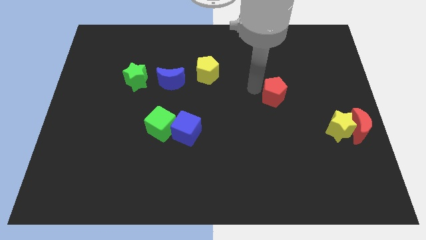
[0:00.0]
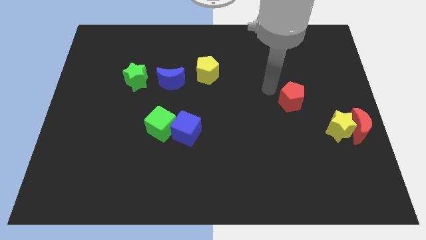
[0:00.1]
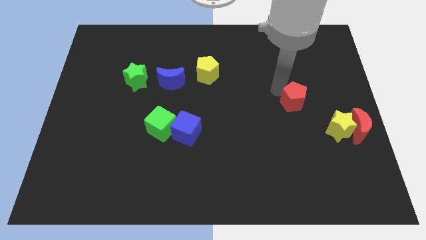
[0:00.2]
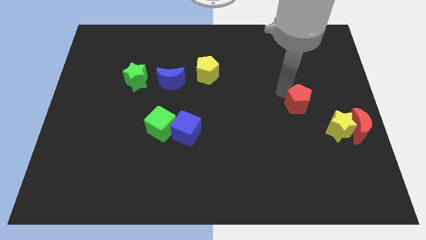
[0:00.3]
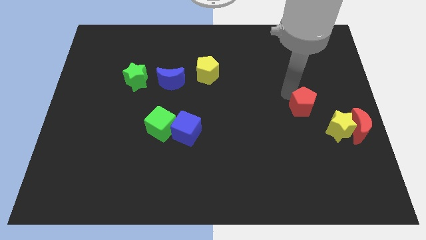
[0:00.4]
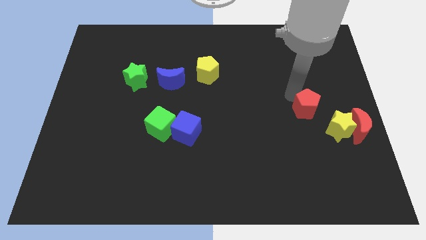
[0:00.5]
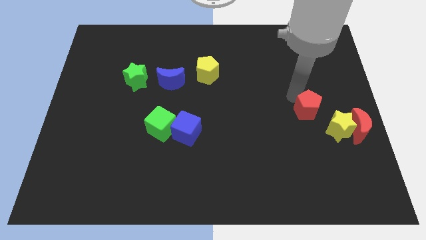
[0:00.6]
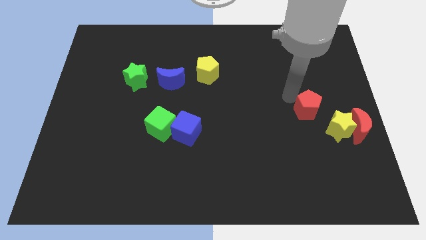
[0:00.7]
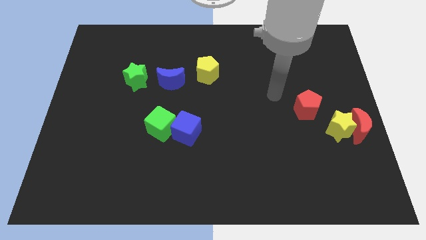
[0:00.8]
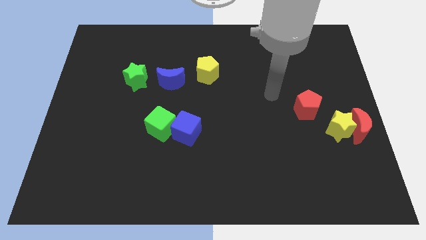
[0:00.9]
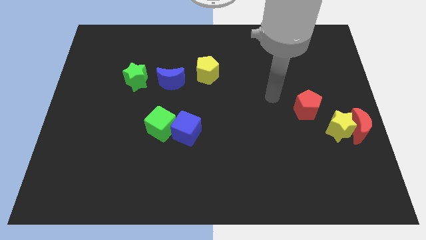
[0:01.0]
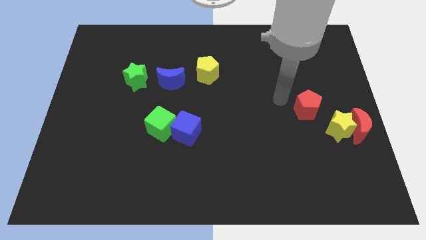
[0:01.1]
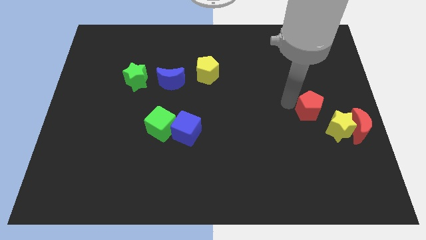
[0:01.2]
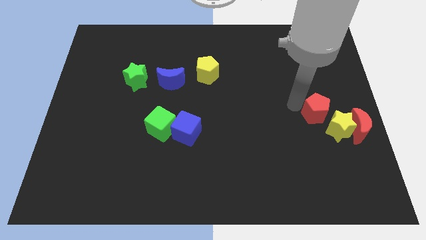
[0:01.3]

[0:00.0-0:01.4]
move the red pentagon above the yellow star

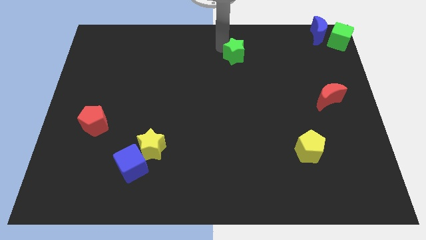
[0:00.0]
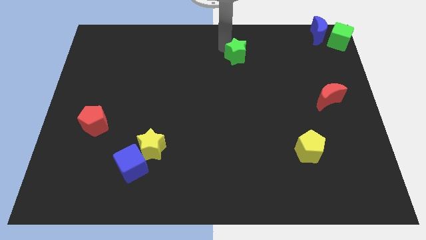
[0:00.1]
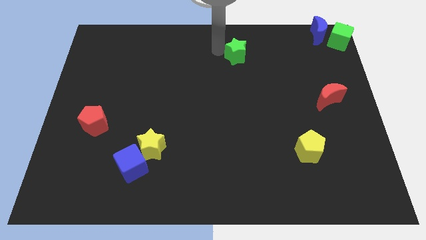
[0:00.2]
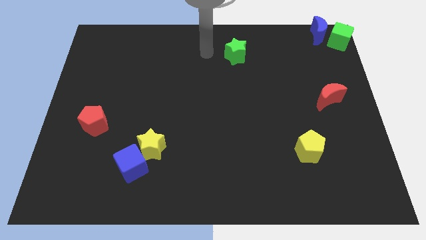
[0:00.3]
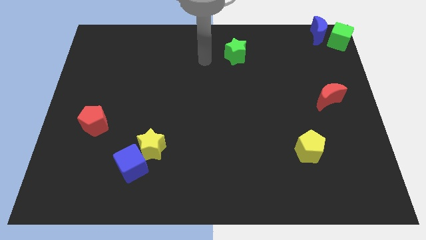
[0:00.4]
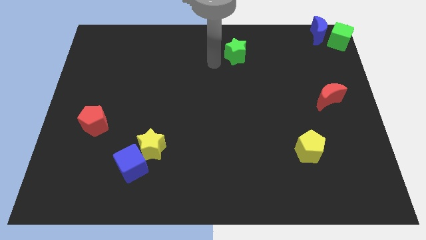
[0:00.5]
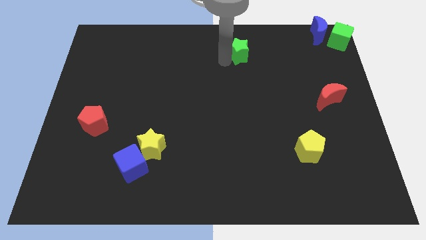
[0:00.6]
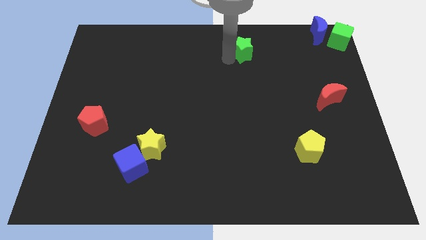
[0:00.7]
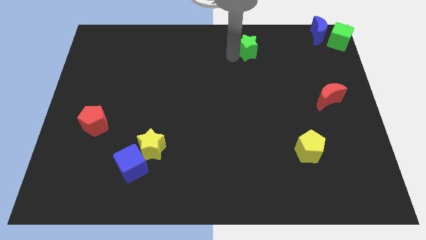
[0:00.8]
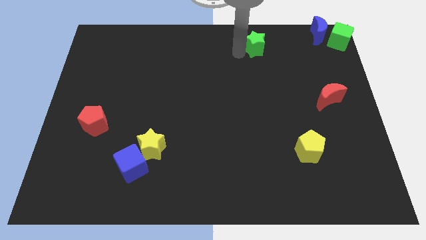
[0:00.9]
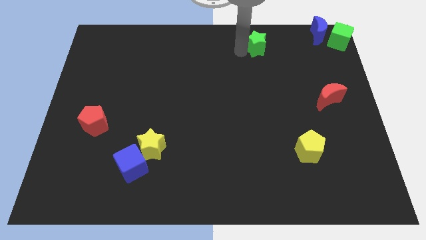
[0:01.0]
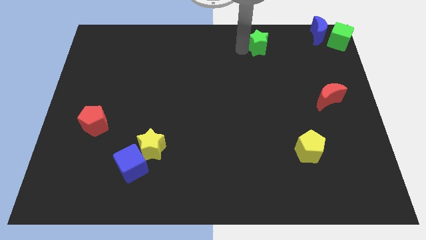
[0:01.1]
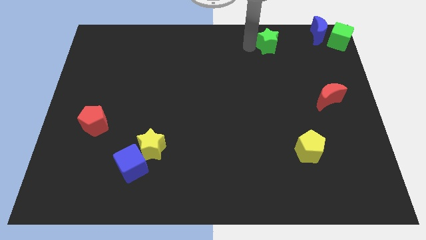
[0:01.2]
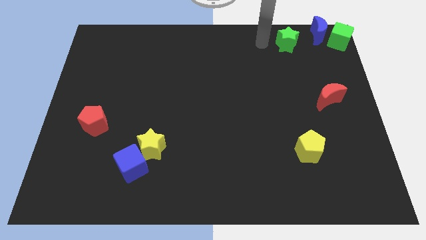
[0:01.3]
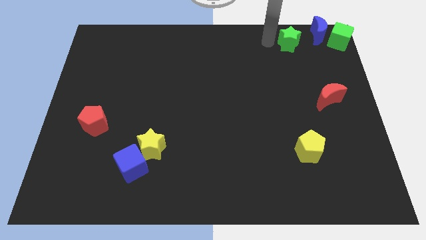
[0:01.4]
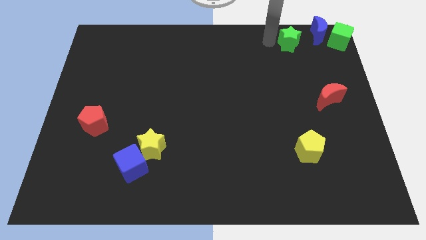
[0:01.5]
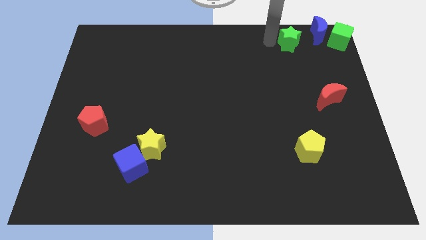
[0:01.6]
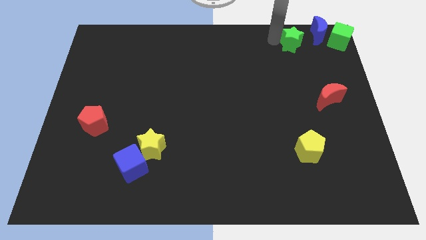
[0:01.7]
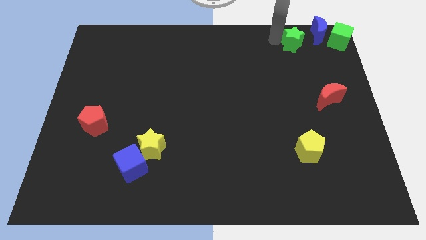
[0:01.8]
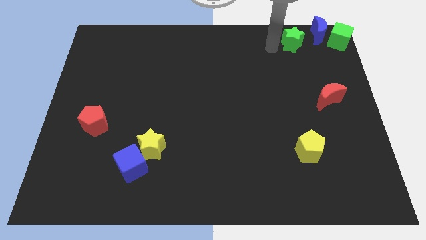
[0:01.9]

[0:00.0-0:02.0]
push the green star close to the blue crescent

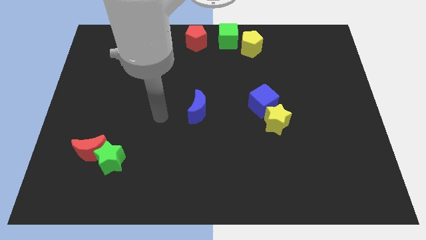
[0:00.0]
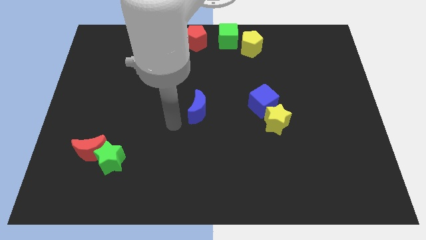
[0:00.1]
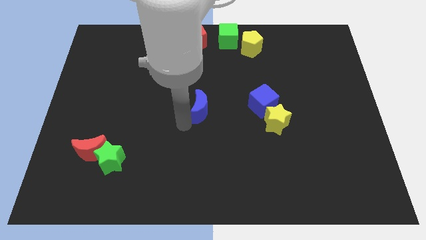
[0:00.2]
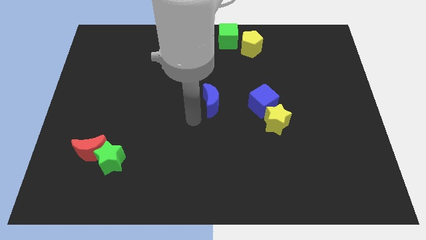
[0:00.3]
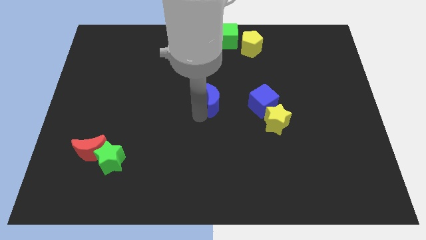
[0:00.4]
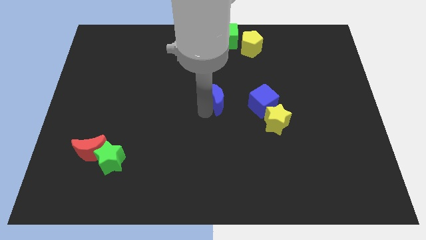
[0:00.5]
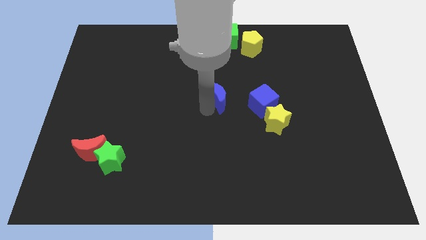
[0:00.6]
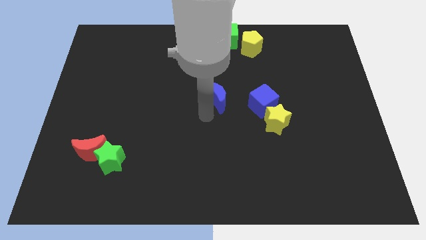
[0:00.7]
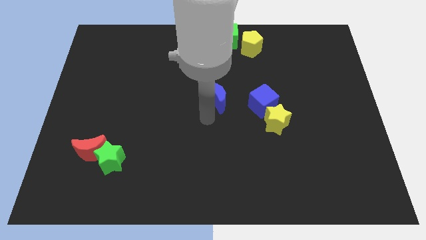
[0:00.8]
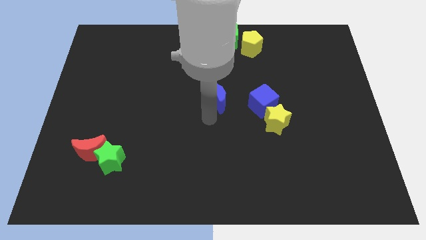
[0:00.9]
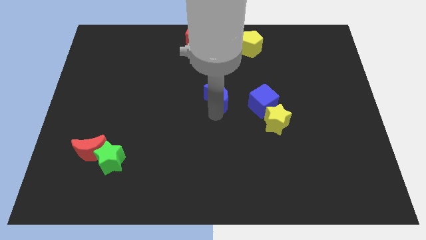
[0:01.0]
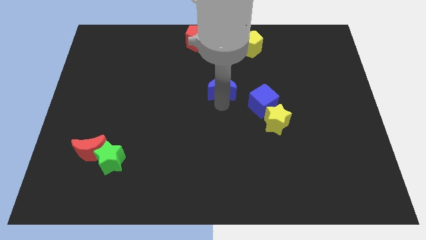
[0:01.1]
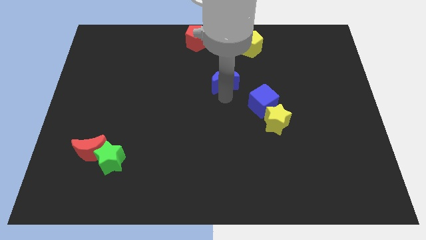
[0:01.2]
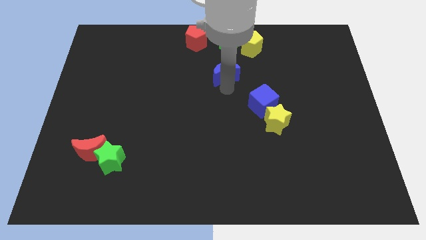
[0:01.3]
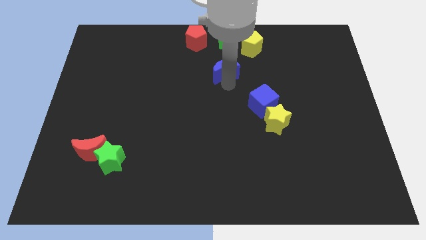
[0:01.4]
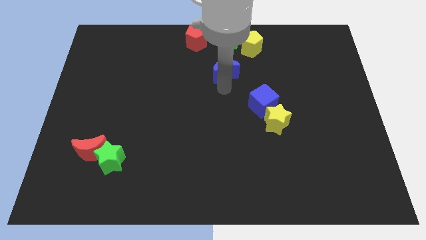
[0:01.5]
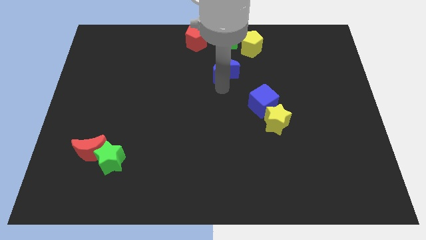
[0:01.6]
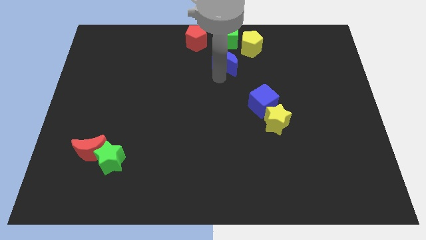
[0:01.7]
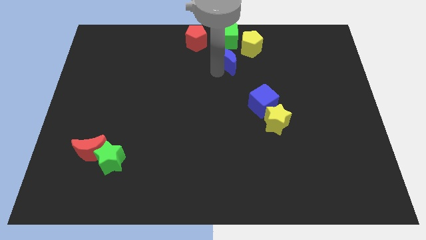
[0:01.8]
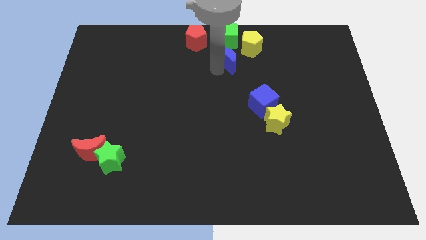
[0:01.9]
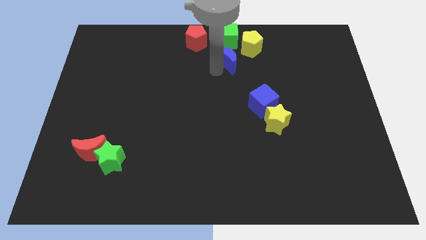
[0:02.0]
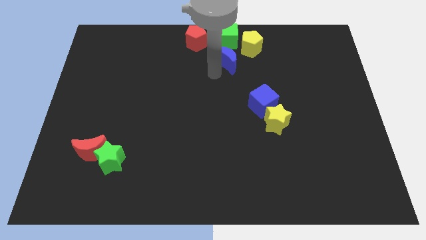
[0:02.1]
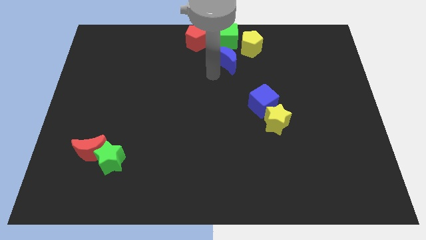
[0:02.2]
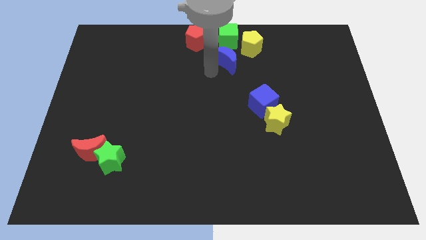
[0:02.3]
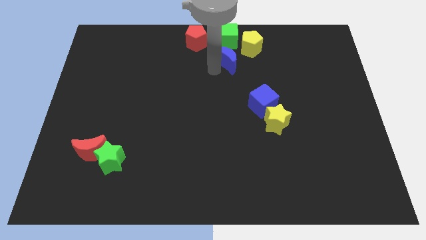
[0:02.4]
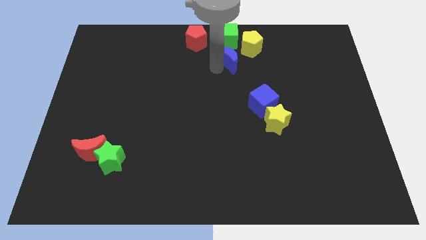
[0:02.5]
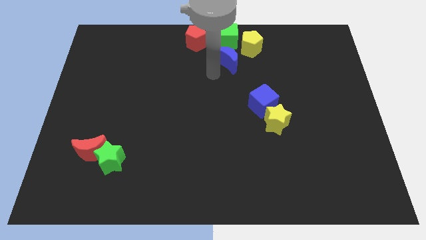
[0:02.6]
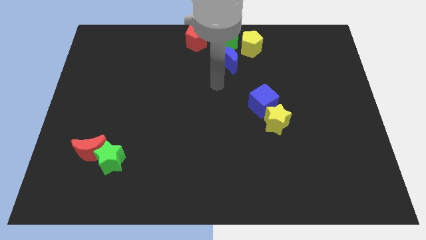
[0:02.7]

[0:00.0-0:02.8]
place blue crescent below green cube

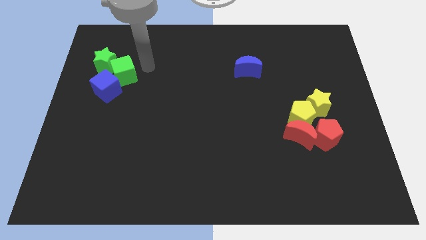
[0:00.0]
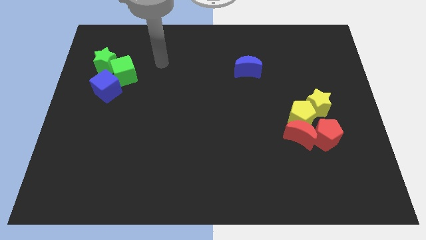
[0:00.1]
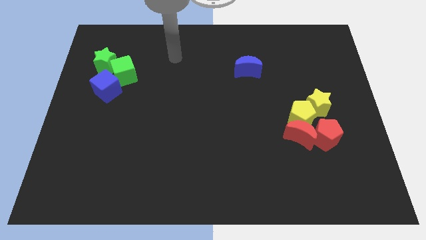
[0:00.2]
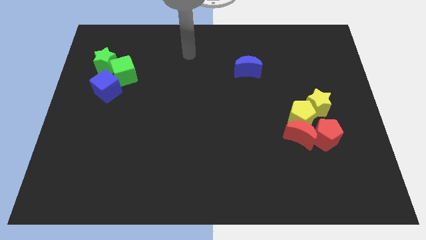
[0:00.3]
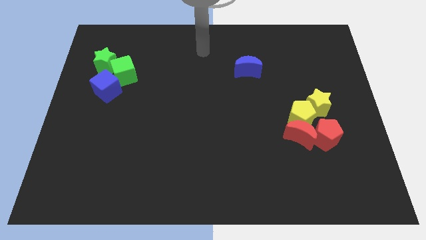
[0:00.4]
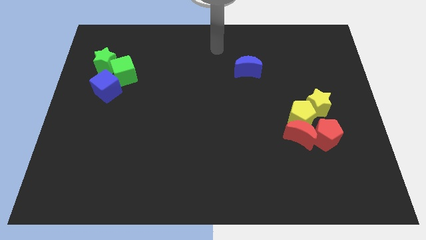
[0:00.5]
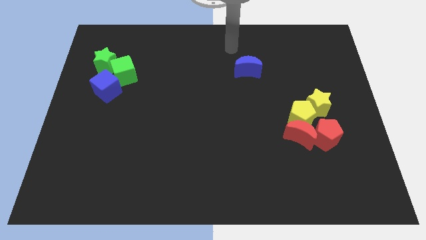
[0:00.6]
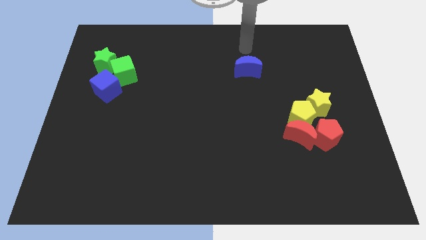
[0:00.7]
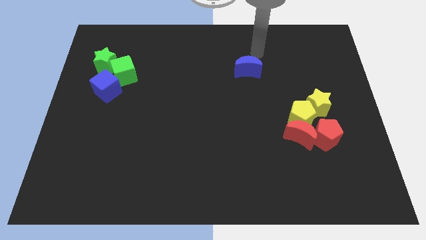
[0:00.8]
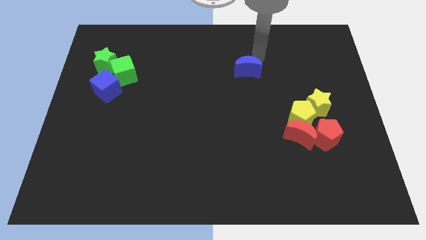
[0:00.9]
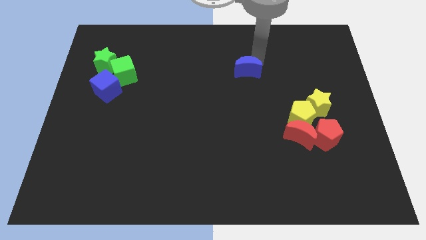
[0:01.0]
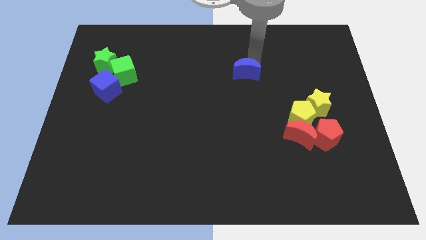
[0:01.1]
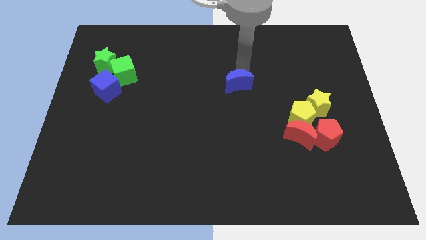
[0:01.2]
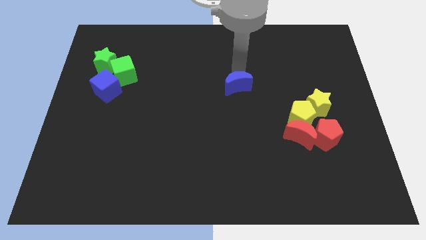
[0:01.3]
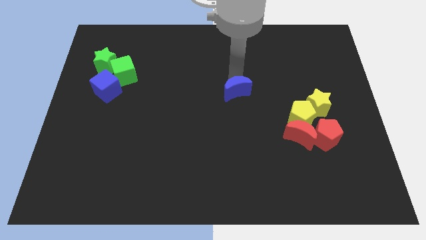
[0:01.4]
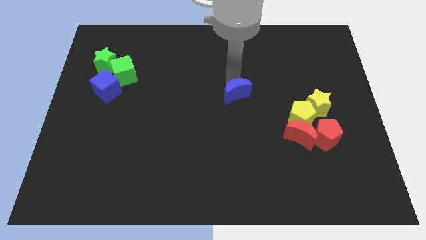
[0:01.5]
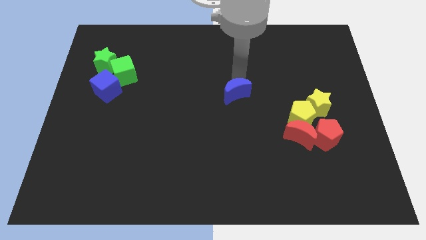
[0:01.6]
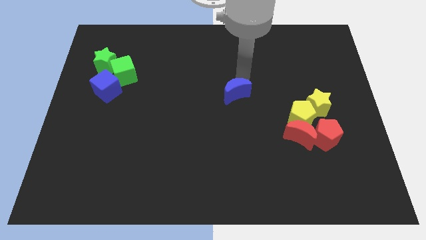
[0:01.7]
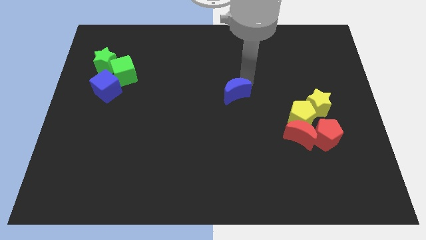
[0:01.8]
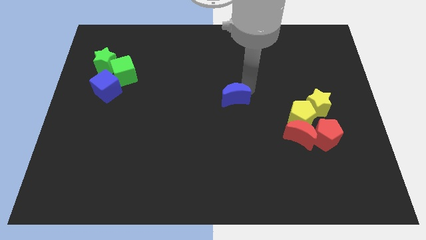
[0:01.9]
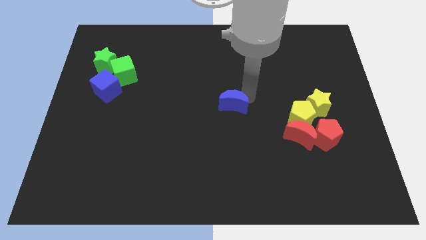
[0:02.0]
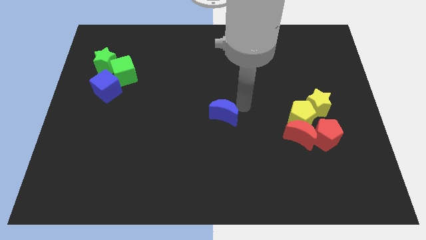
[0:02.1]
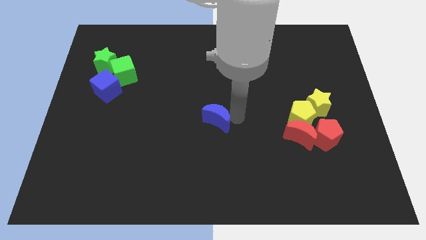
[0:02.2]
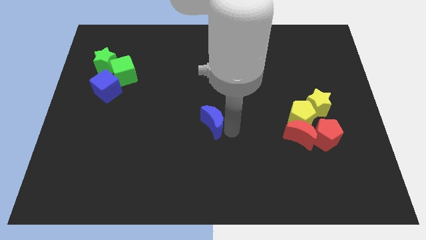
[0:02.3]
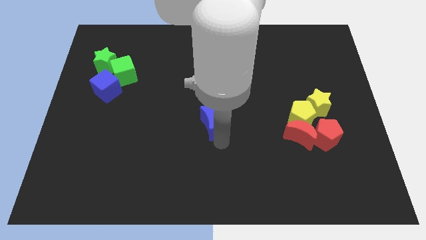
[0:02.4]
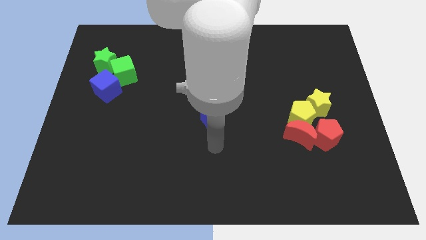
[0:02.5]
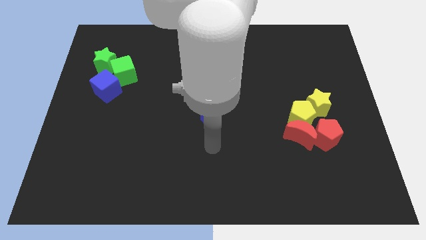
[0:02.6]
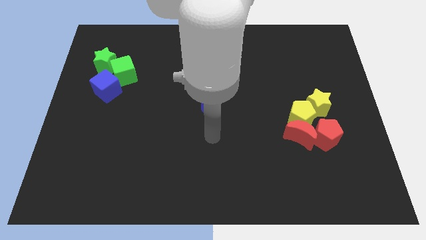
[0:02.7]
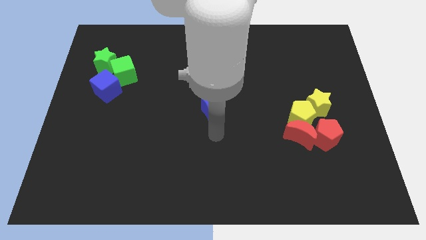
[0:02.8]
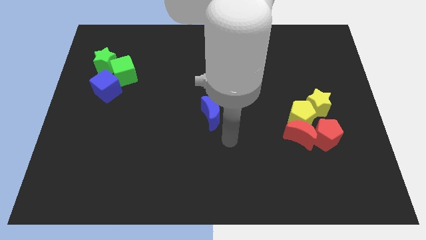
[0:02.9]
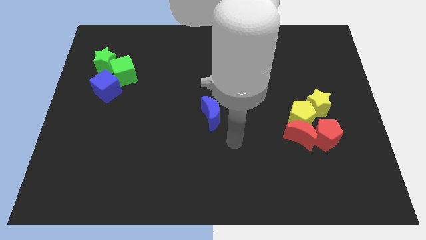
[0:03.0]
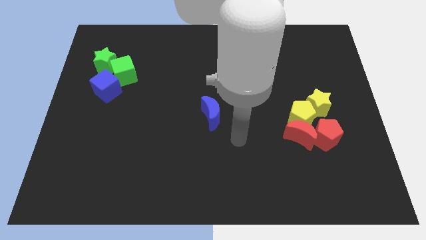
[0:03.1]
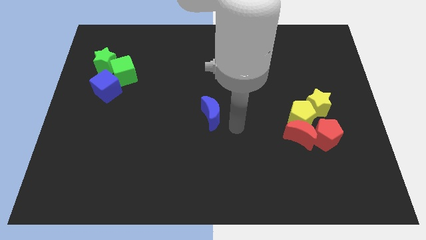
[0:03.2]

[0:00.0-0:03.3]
place the blue crescent at the center of the board
